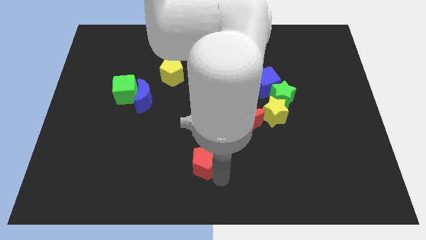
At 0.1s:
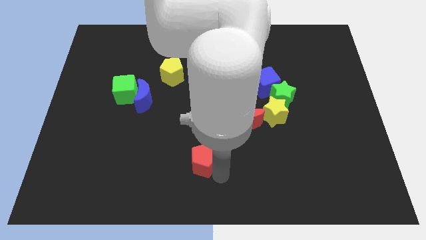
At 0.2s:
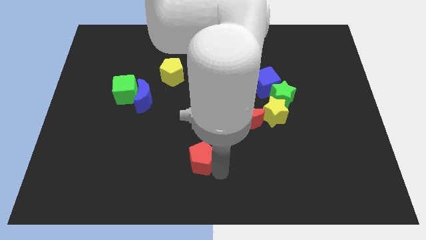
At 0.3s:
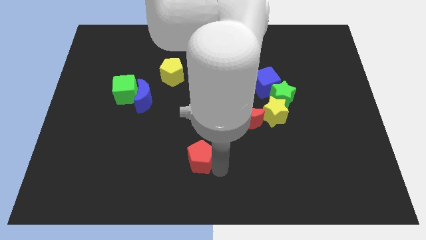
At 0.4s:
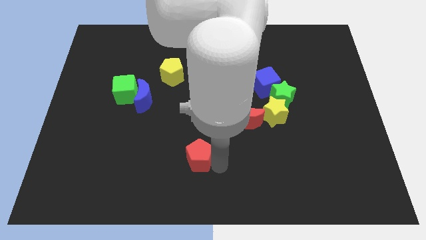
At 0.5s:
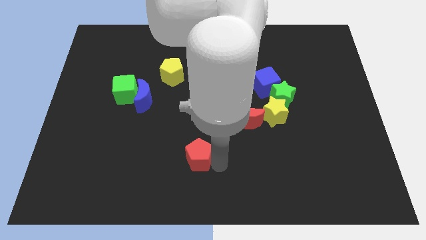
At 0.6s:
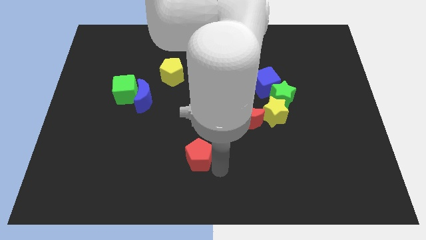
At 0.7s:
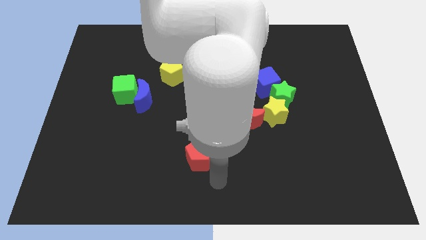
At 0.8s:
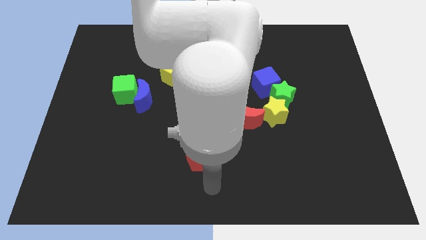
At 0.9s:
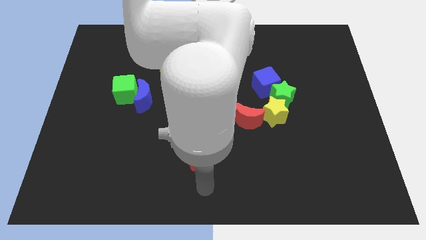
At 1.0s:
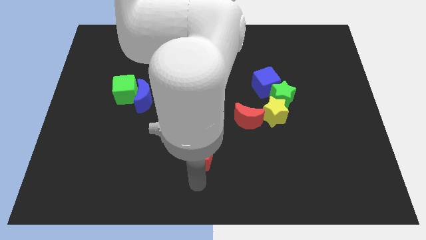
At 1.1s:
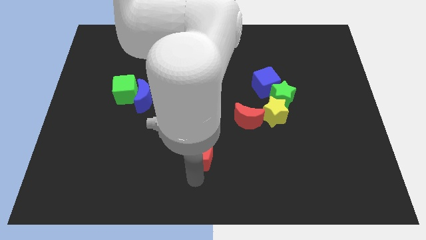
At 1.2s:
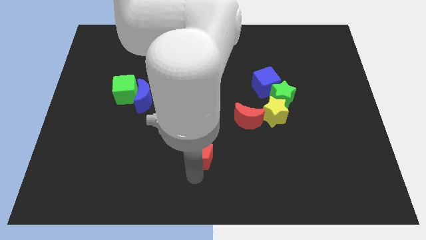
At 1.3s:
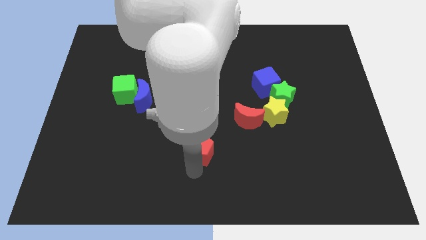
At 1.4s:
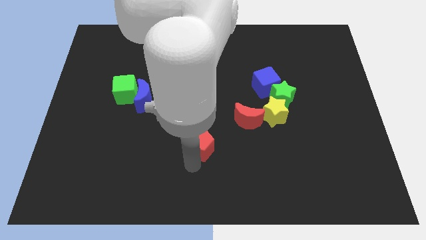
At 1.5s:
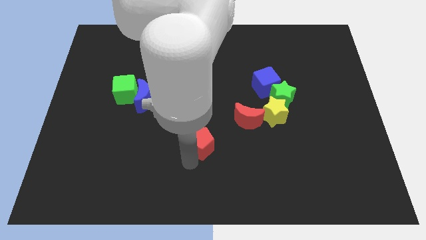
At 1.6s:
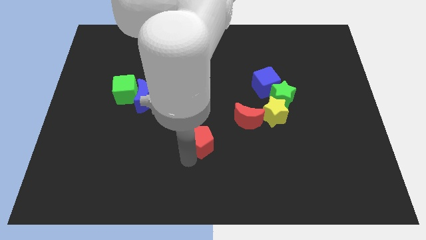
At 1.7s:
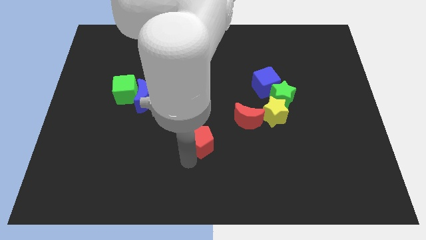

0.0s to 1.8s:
push the red pentagon towards the top

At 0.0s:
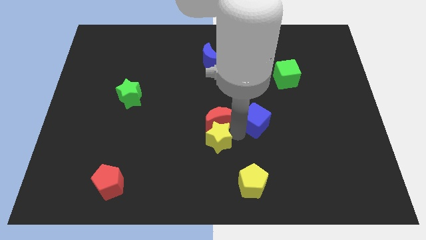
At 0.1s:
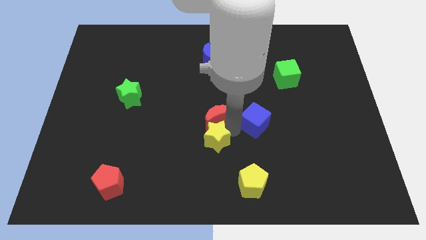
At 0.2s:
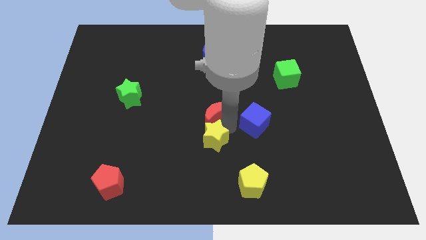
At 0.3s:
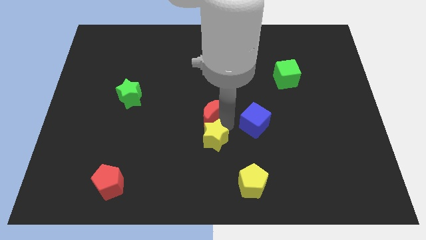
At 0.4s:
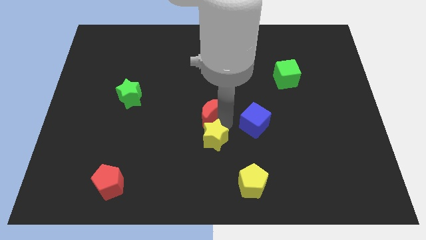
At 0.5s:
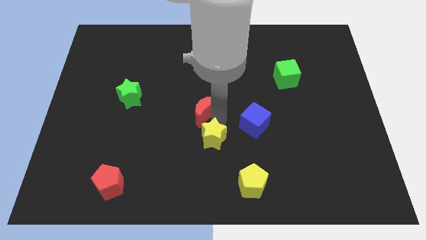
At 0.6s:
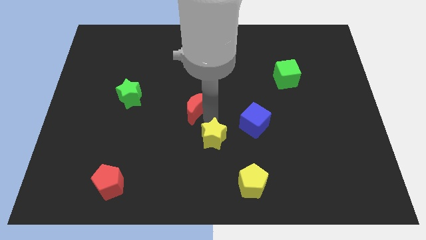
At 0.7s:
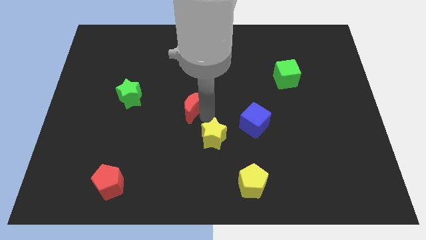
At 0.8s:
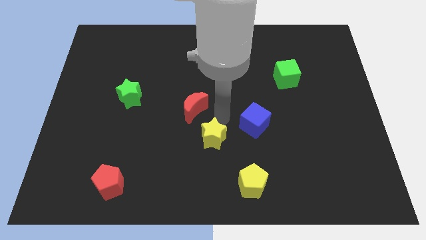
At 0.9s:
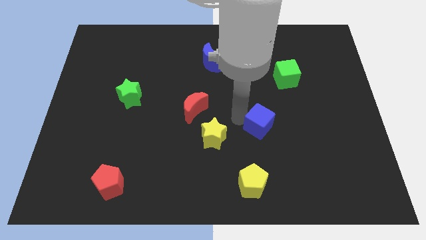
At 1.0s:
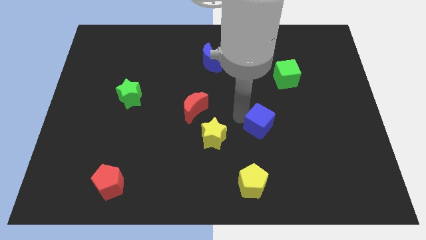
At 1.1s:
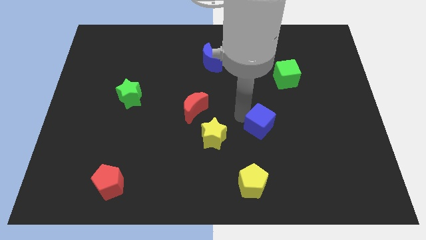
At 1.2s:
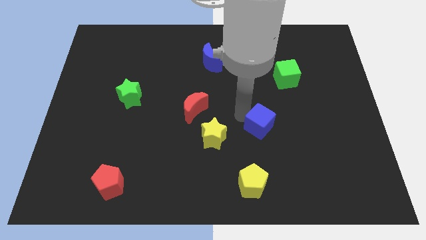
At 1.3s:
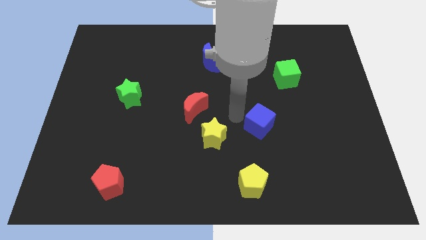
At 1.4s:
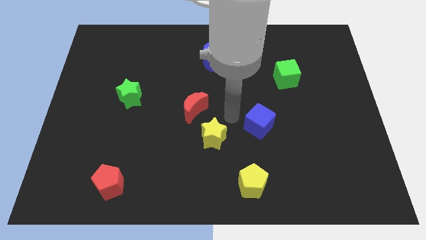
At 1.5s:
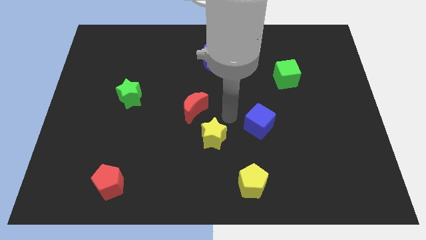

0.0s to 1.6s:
separate the yellow star red crescent and the blue cube

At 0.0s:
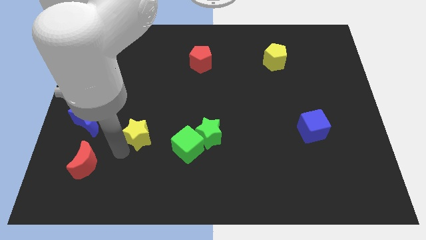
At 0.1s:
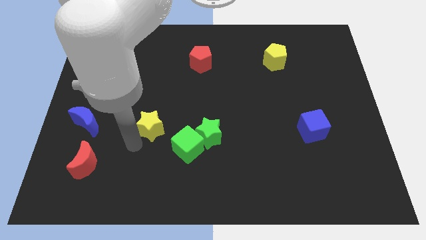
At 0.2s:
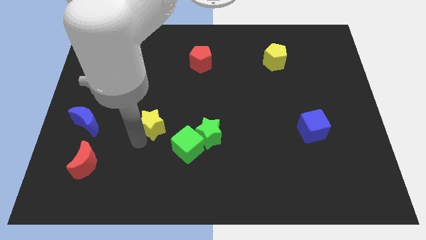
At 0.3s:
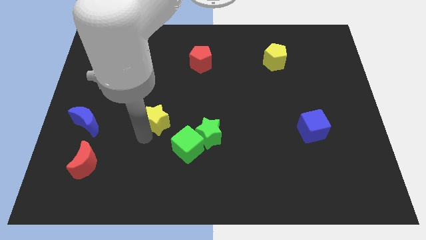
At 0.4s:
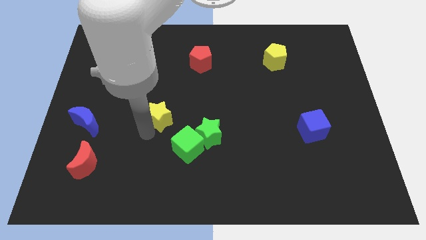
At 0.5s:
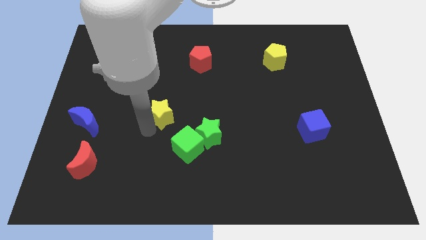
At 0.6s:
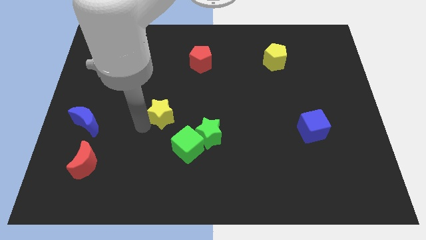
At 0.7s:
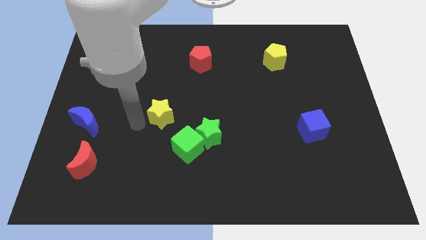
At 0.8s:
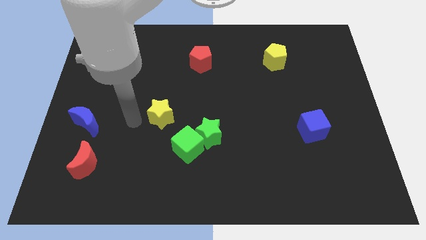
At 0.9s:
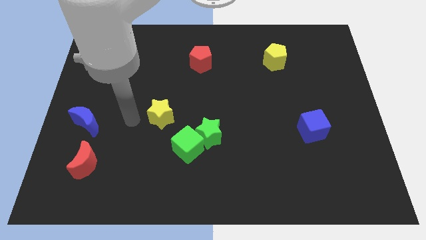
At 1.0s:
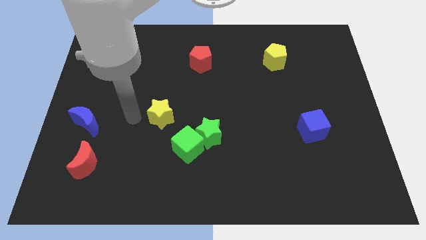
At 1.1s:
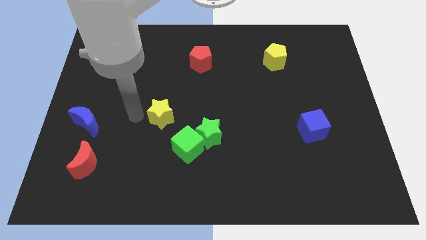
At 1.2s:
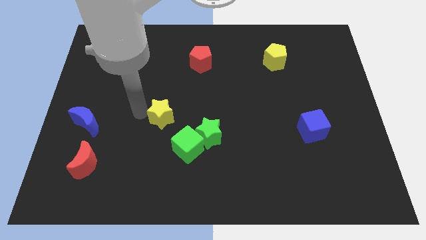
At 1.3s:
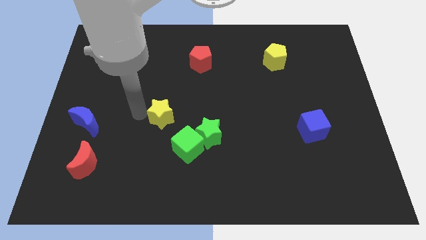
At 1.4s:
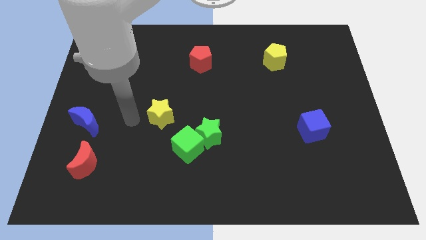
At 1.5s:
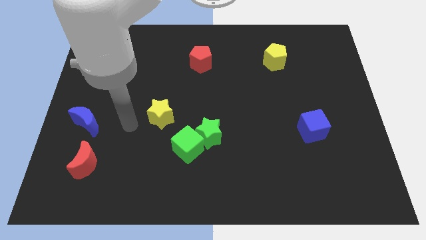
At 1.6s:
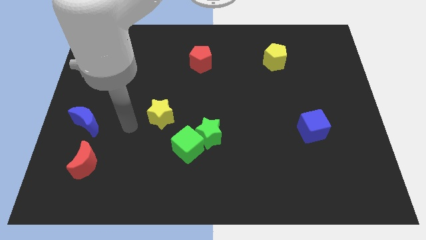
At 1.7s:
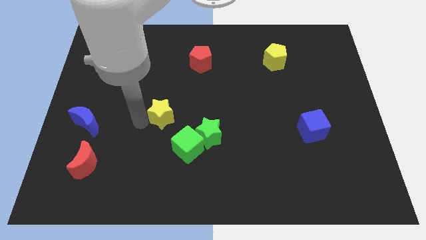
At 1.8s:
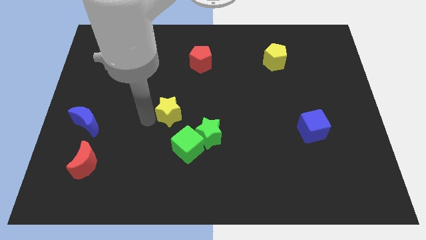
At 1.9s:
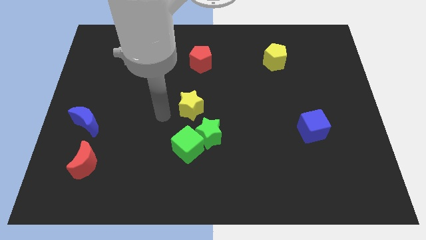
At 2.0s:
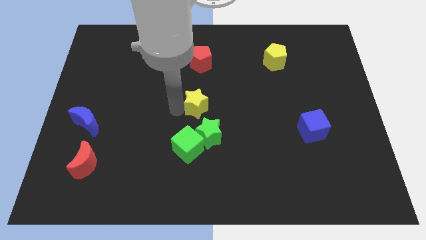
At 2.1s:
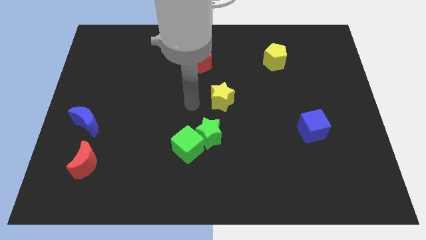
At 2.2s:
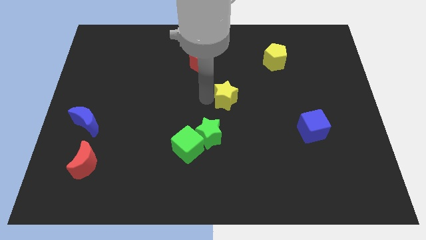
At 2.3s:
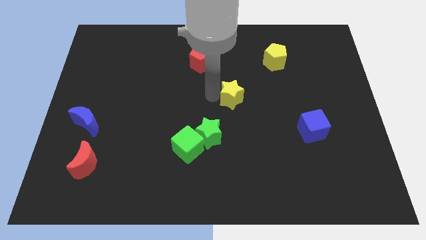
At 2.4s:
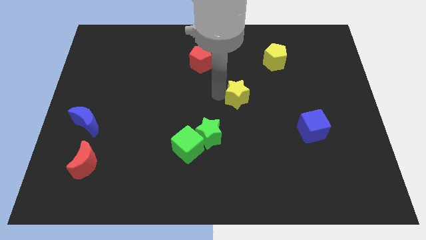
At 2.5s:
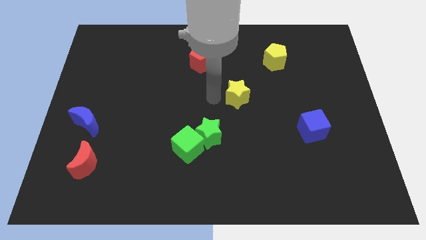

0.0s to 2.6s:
move the yellow star to the top right of the green star diagonally

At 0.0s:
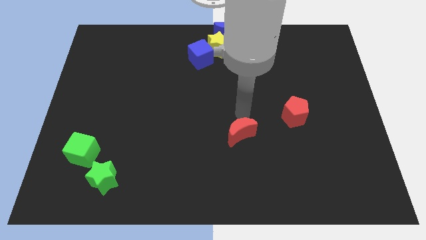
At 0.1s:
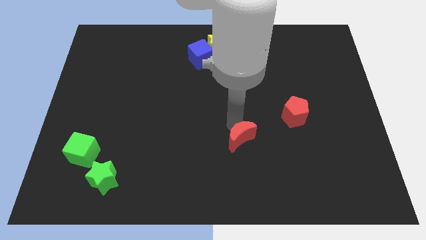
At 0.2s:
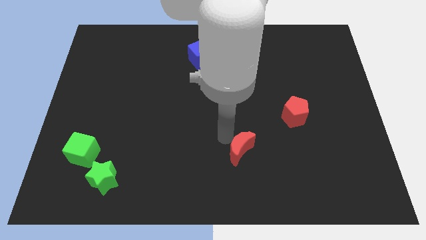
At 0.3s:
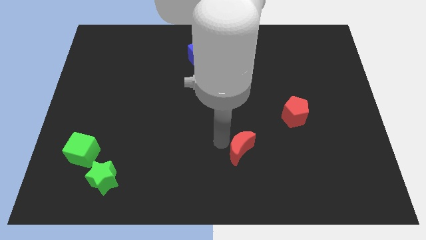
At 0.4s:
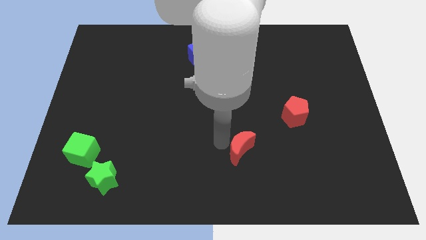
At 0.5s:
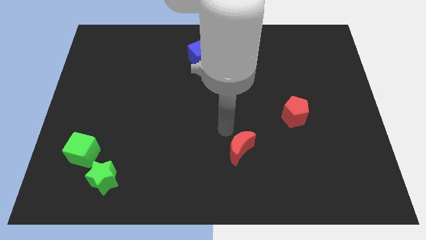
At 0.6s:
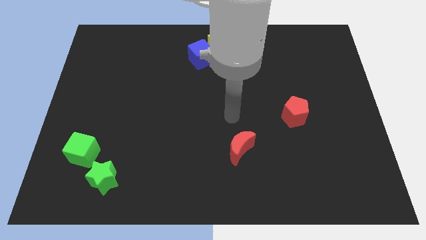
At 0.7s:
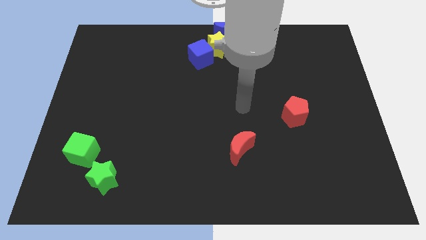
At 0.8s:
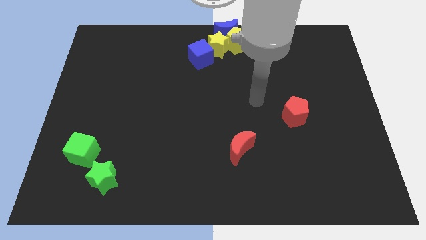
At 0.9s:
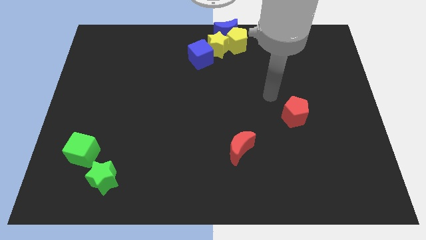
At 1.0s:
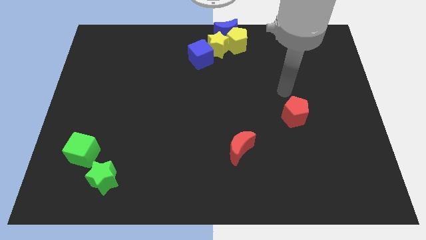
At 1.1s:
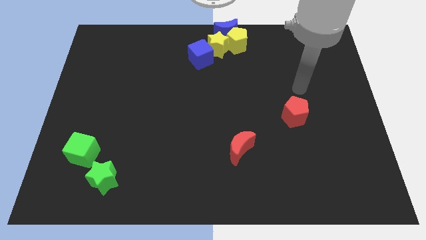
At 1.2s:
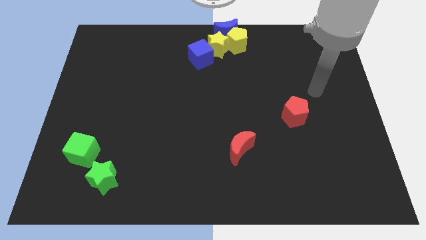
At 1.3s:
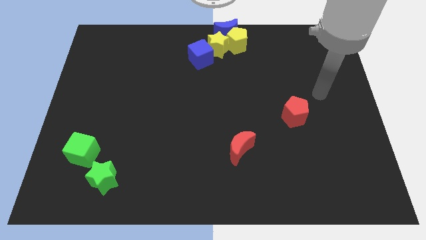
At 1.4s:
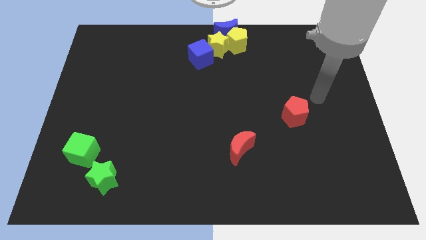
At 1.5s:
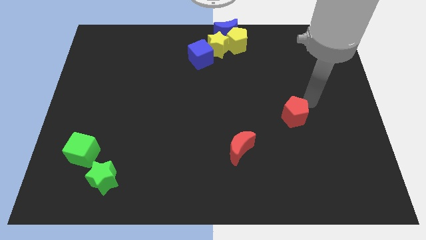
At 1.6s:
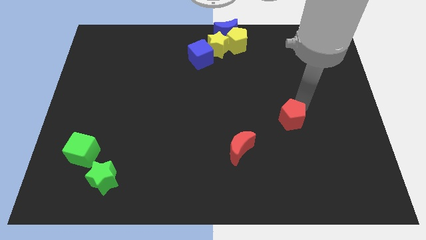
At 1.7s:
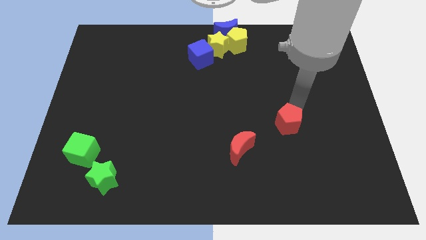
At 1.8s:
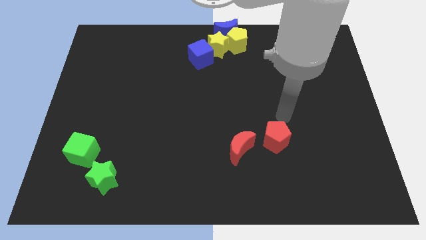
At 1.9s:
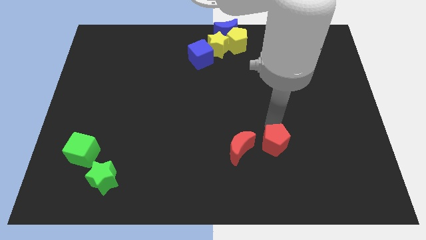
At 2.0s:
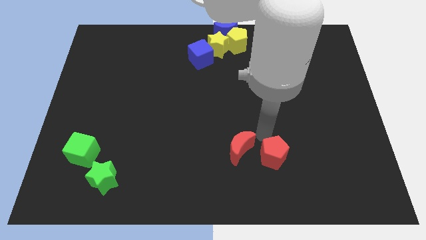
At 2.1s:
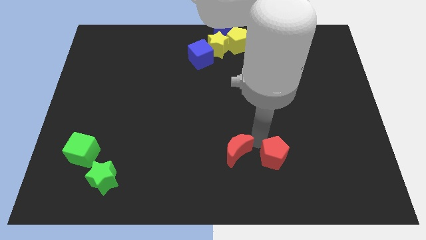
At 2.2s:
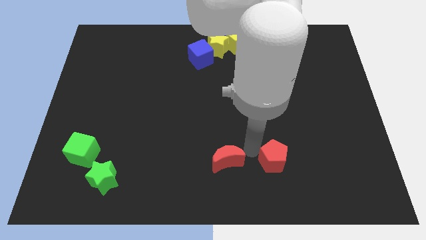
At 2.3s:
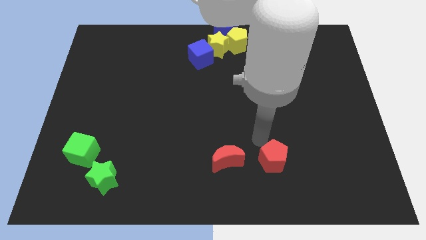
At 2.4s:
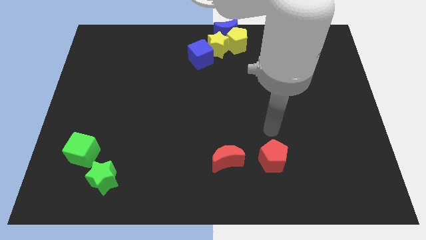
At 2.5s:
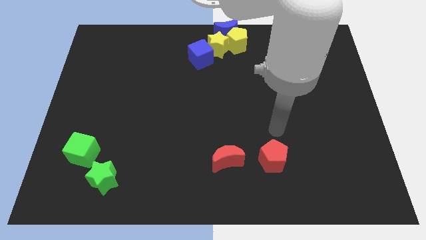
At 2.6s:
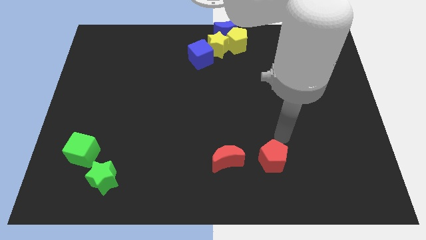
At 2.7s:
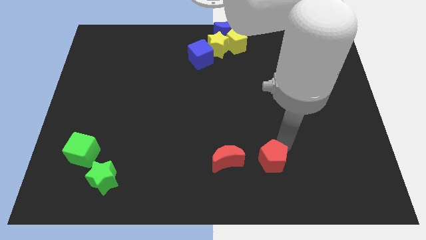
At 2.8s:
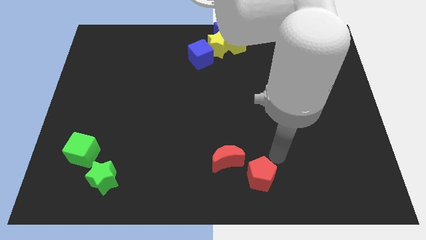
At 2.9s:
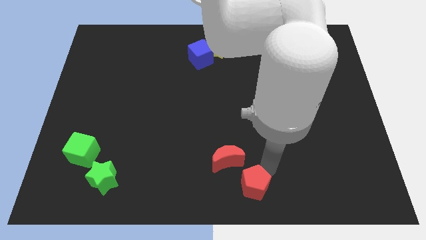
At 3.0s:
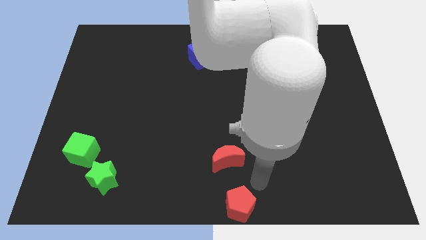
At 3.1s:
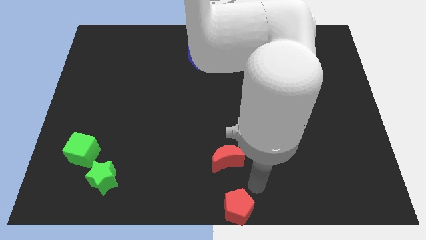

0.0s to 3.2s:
place the red pentagon at bottom center of the board
